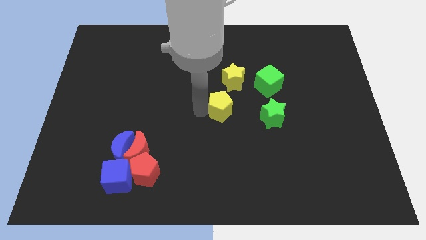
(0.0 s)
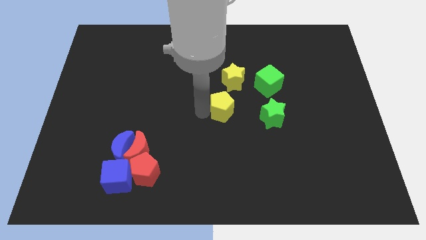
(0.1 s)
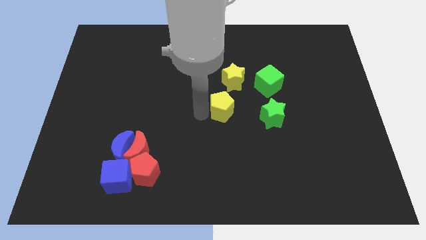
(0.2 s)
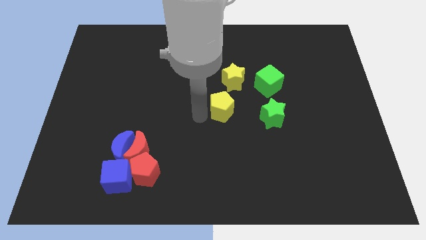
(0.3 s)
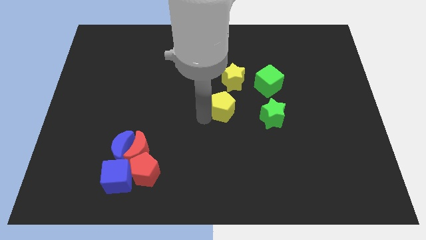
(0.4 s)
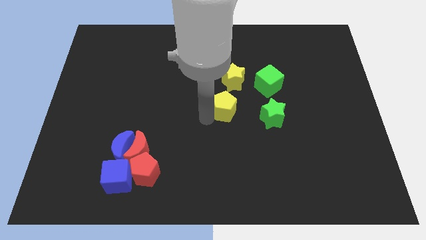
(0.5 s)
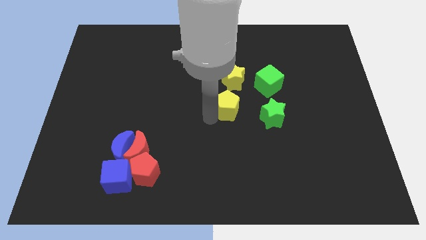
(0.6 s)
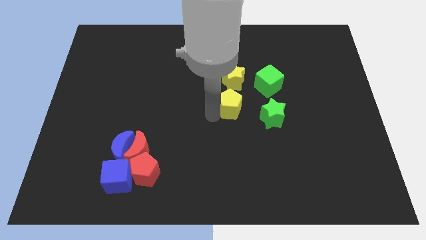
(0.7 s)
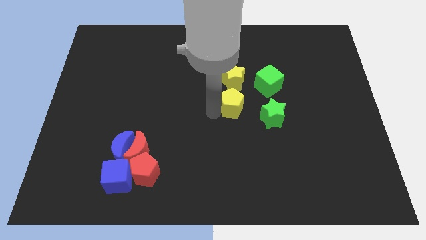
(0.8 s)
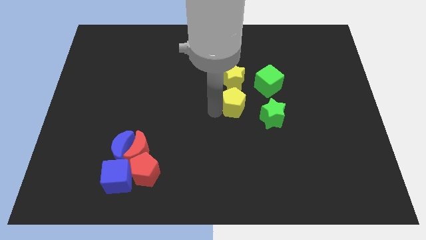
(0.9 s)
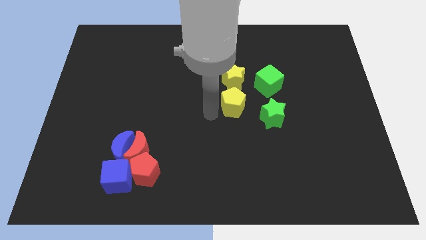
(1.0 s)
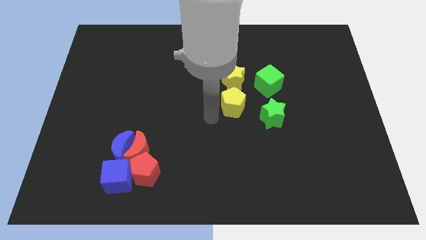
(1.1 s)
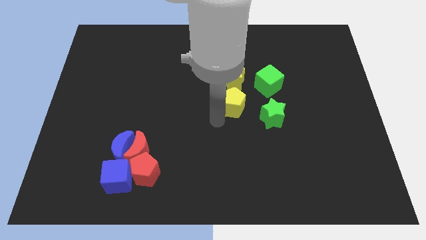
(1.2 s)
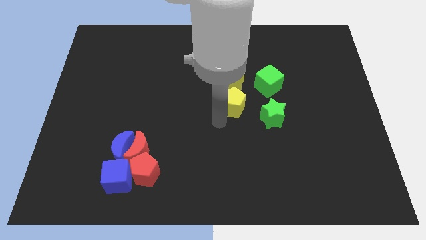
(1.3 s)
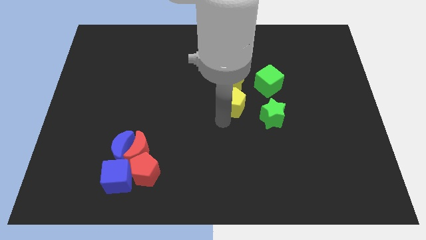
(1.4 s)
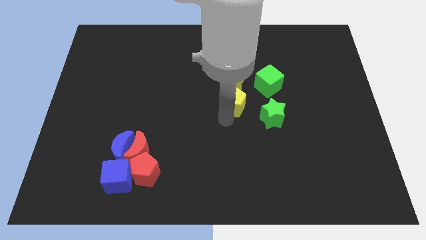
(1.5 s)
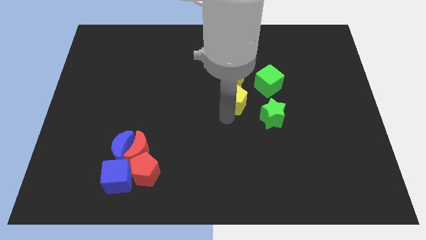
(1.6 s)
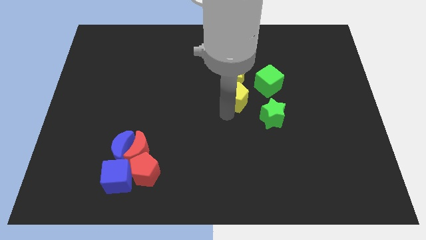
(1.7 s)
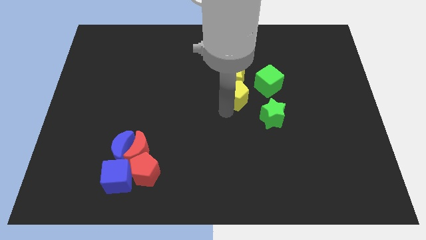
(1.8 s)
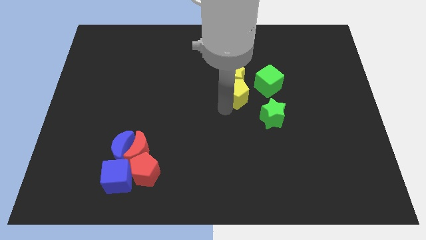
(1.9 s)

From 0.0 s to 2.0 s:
move the yellow pentagon to the bottom of the yellow star

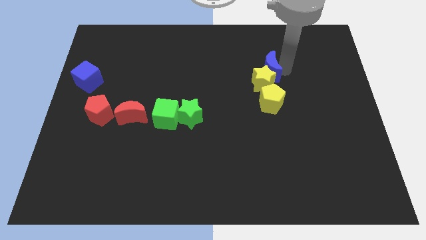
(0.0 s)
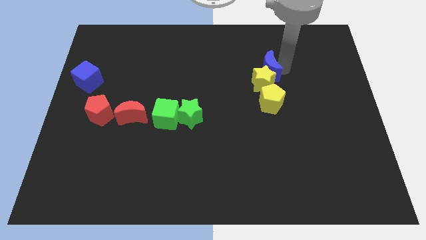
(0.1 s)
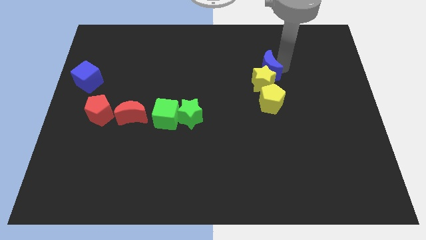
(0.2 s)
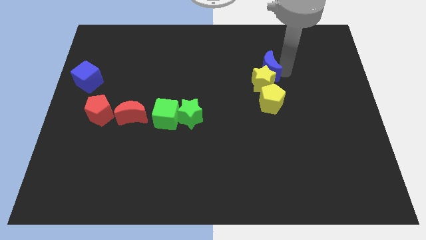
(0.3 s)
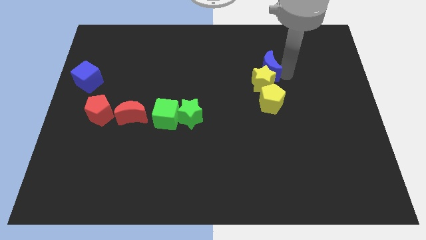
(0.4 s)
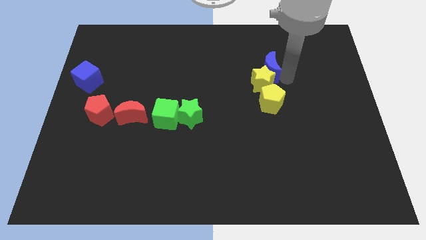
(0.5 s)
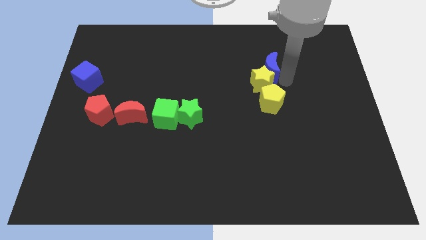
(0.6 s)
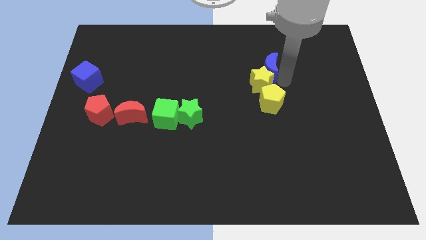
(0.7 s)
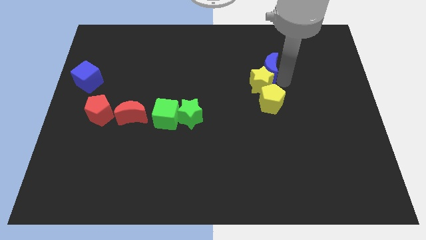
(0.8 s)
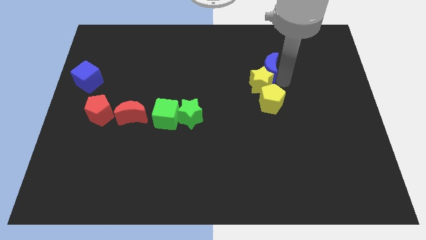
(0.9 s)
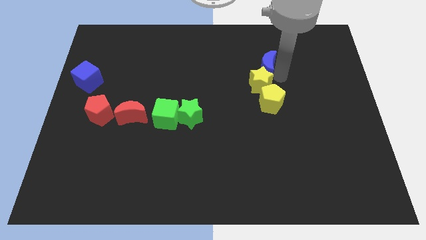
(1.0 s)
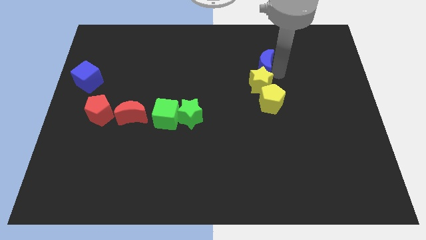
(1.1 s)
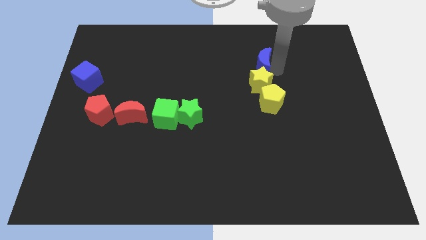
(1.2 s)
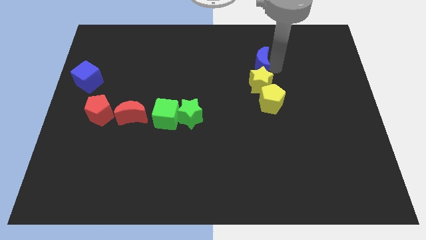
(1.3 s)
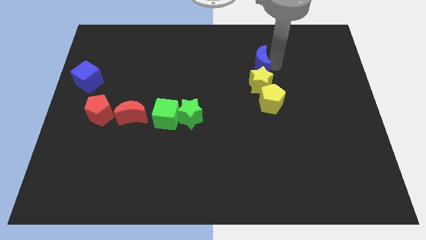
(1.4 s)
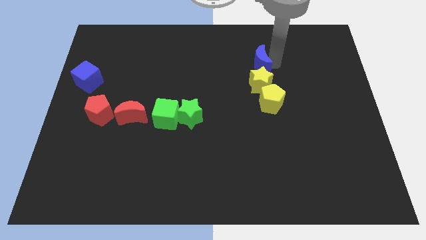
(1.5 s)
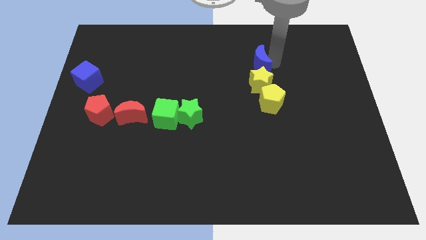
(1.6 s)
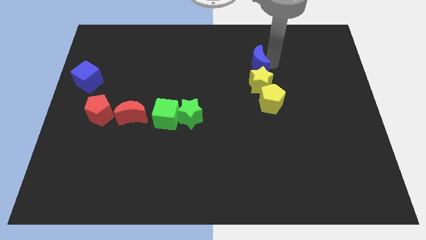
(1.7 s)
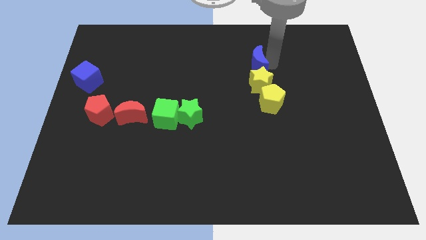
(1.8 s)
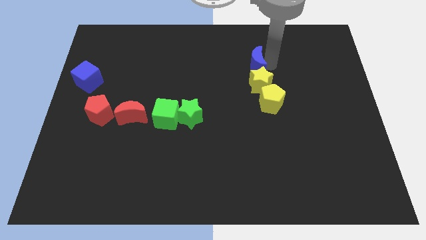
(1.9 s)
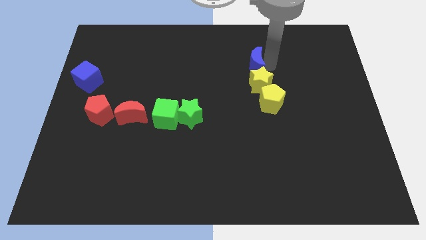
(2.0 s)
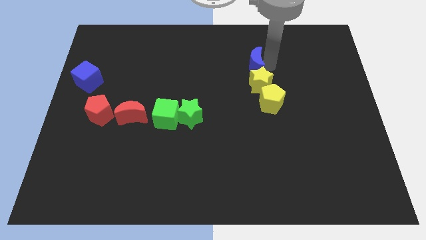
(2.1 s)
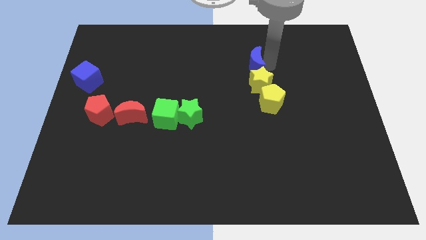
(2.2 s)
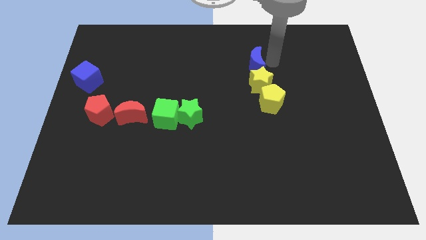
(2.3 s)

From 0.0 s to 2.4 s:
place blue crescent above yellow star

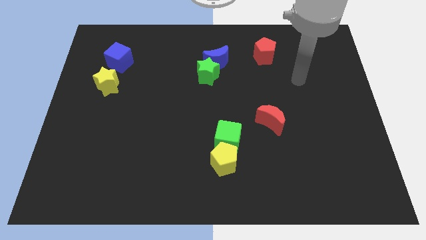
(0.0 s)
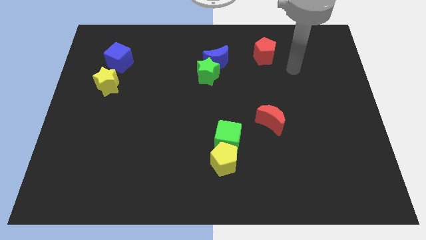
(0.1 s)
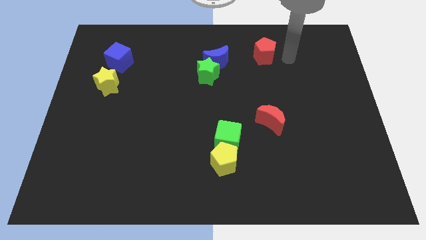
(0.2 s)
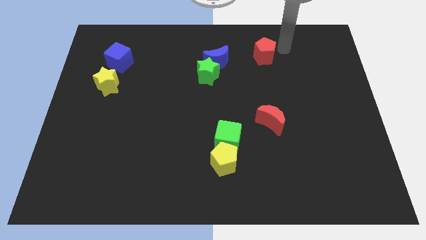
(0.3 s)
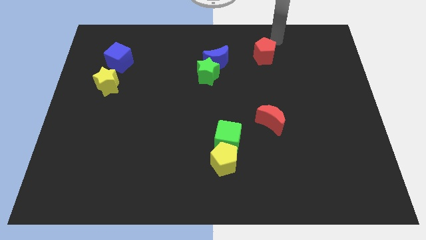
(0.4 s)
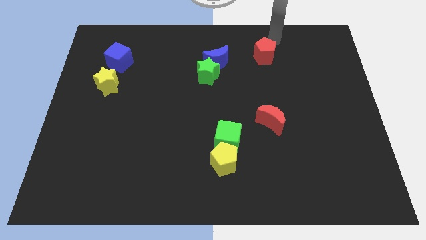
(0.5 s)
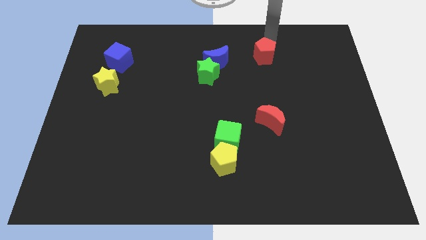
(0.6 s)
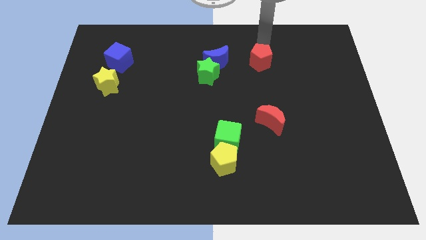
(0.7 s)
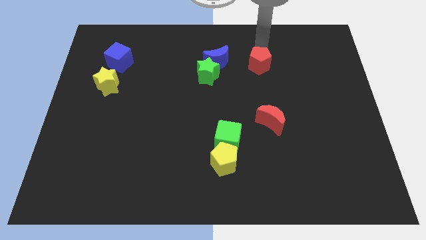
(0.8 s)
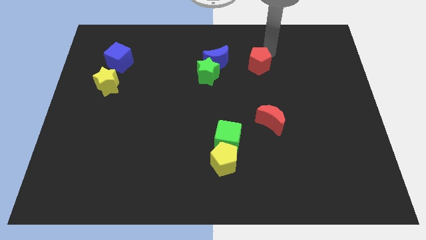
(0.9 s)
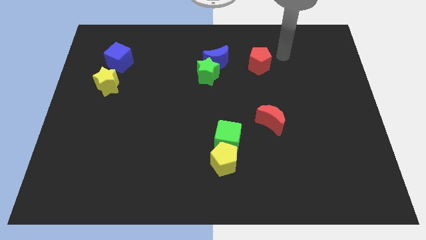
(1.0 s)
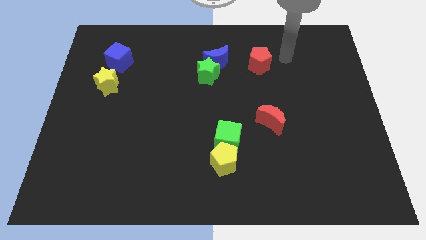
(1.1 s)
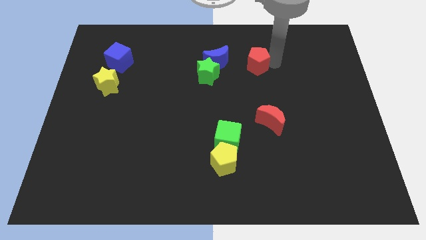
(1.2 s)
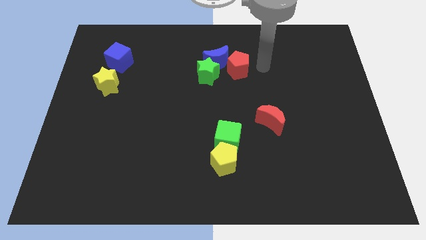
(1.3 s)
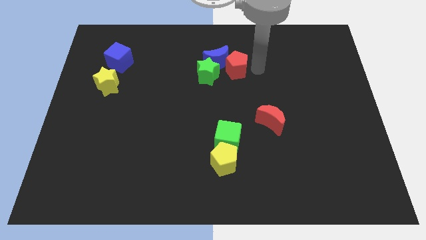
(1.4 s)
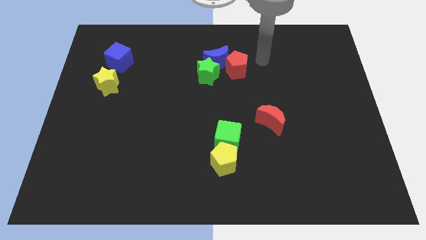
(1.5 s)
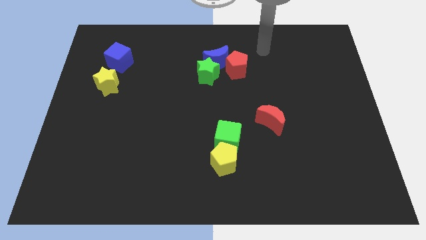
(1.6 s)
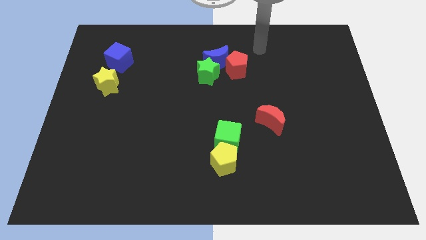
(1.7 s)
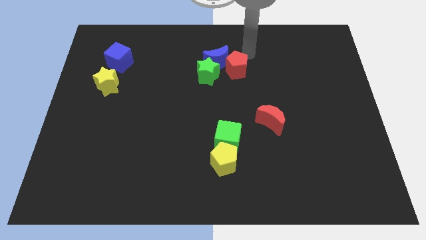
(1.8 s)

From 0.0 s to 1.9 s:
move red pentagon into blue moon

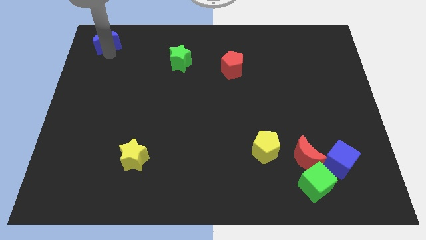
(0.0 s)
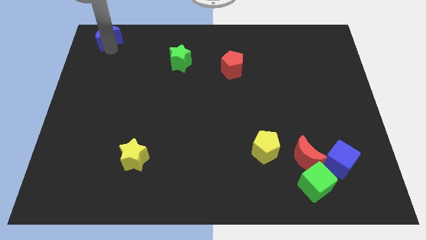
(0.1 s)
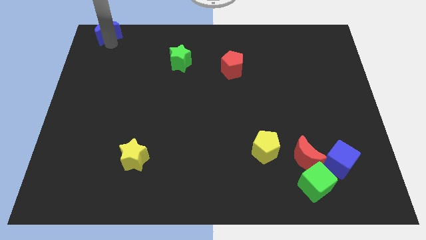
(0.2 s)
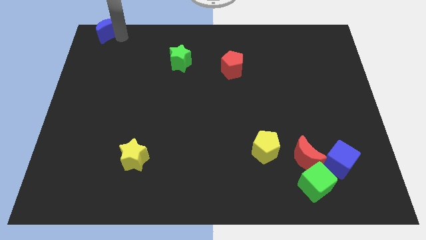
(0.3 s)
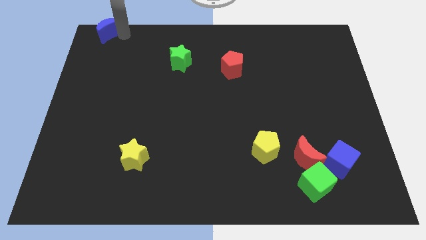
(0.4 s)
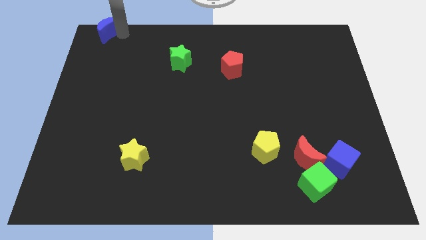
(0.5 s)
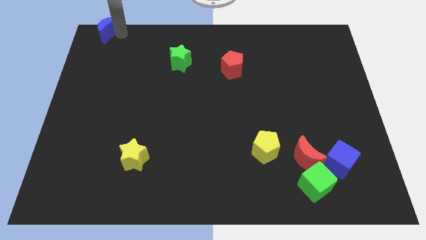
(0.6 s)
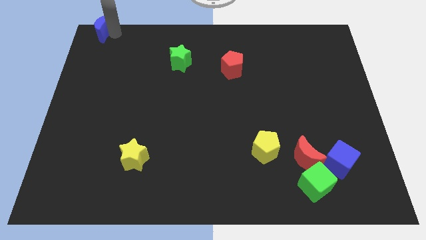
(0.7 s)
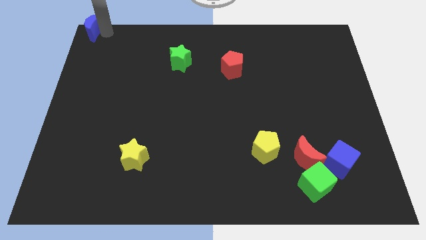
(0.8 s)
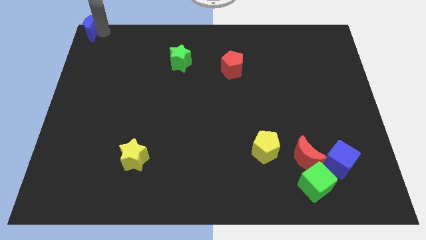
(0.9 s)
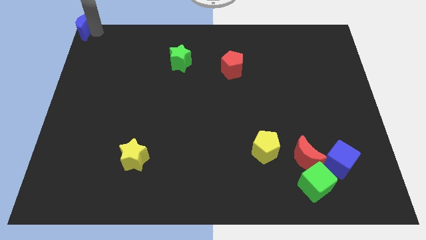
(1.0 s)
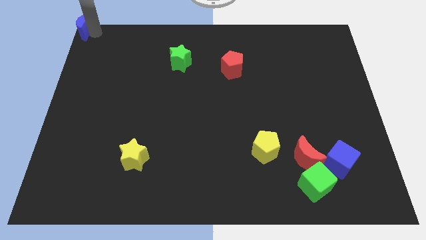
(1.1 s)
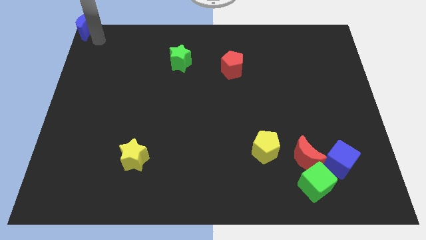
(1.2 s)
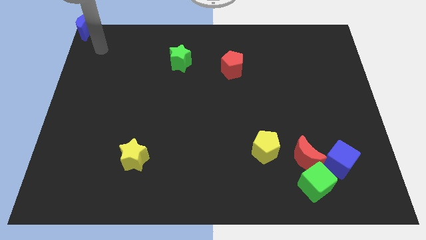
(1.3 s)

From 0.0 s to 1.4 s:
move the blue crescent to the top left

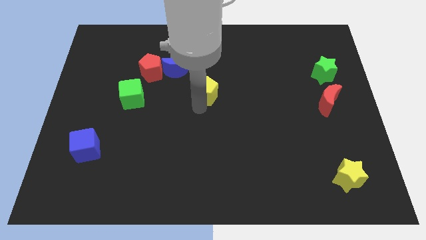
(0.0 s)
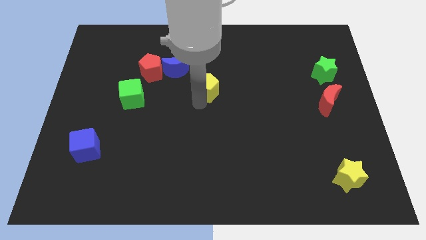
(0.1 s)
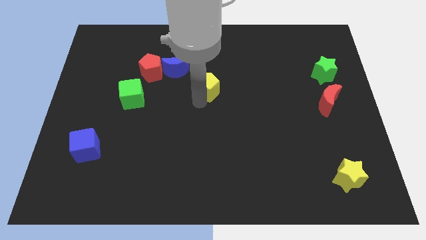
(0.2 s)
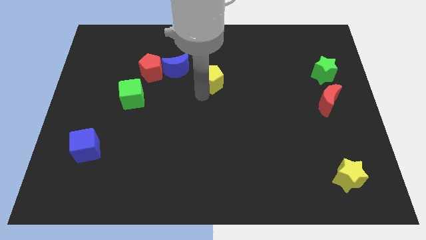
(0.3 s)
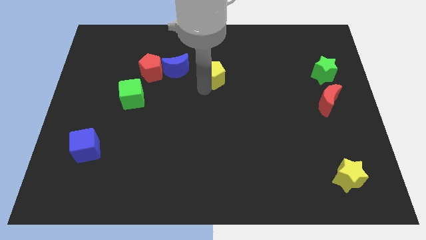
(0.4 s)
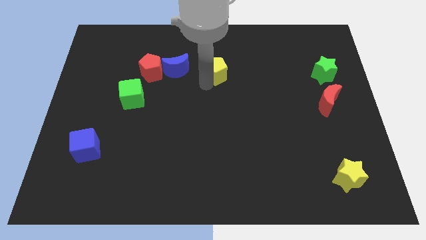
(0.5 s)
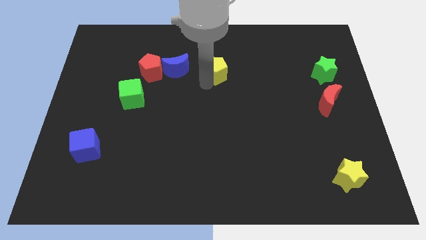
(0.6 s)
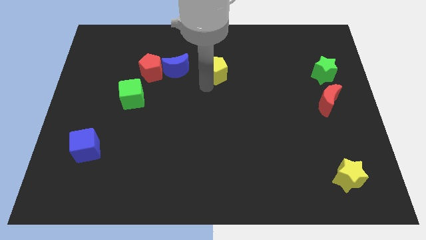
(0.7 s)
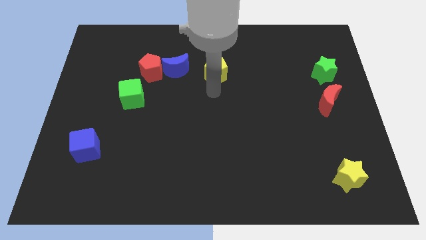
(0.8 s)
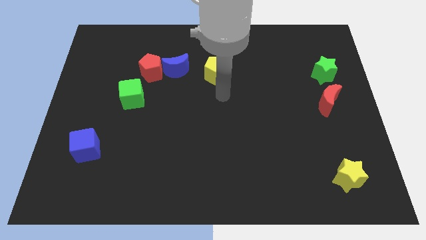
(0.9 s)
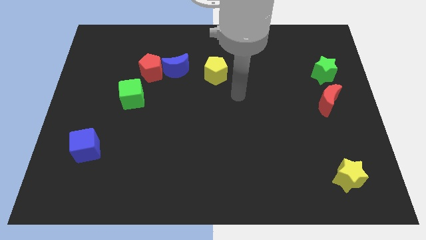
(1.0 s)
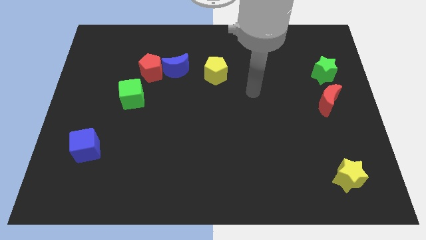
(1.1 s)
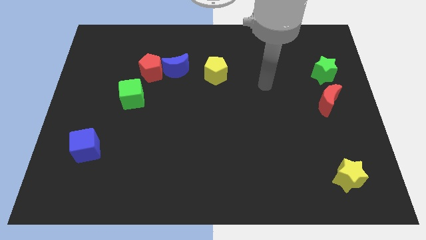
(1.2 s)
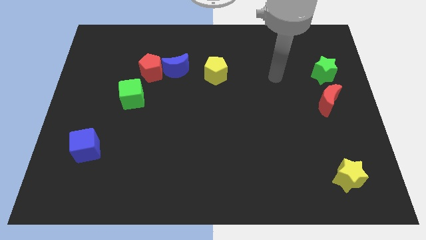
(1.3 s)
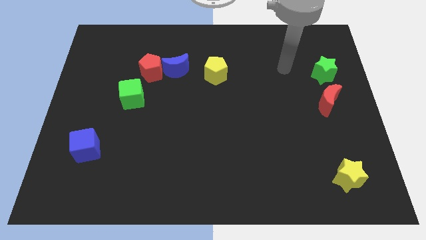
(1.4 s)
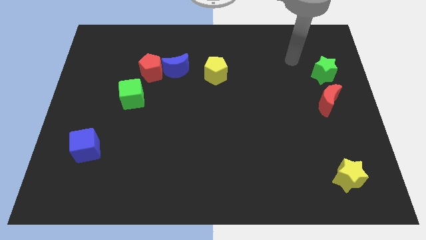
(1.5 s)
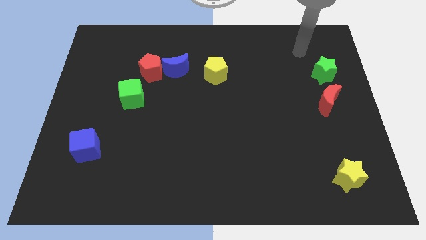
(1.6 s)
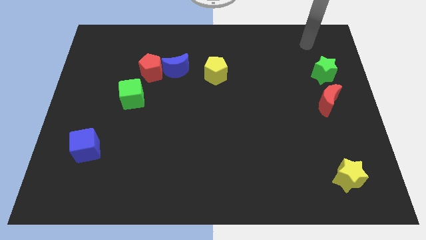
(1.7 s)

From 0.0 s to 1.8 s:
move the yellow pentagon horizontally to the left side of the green star
